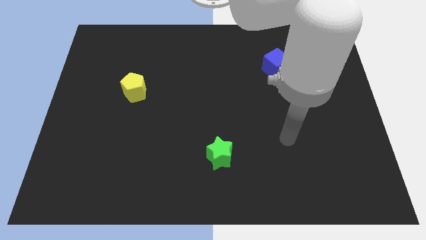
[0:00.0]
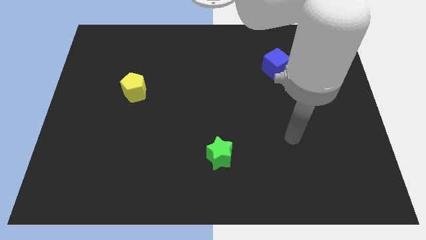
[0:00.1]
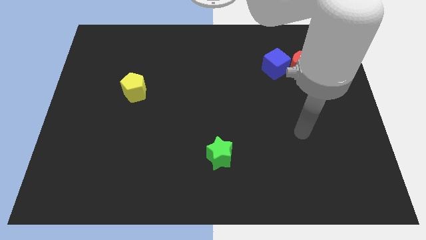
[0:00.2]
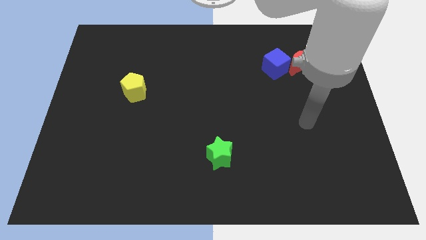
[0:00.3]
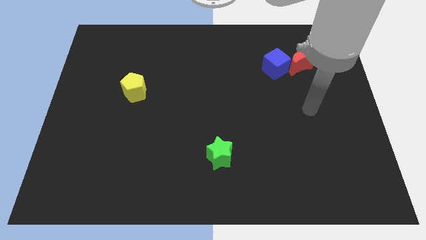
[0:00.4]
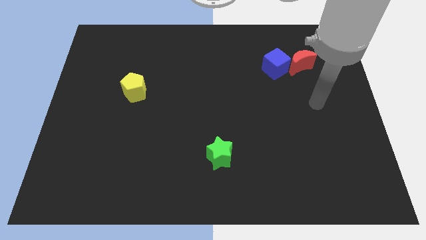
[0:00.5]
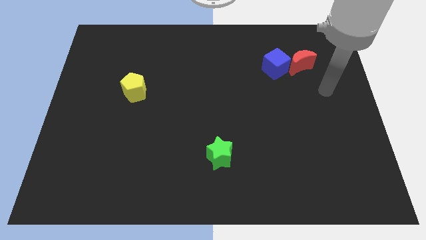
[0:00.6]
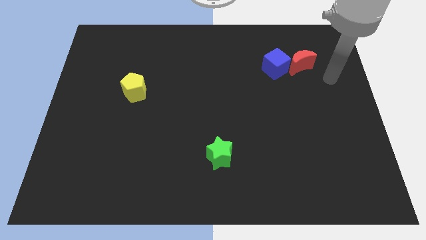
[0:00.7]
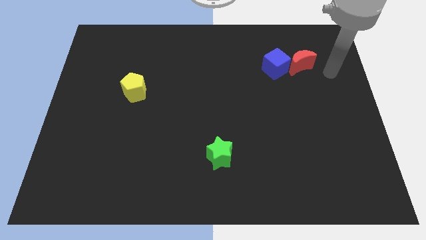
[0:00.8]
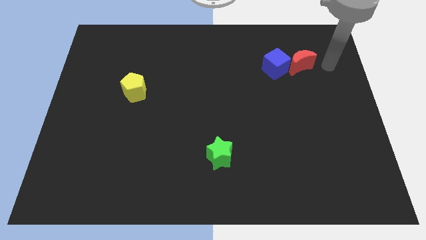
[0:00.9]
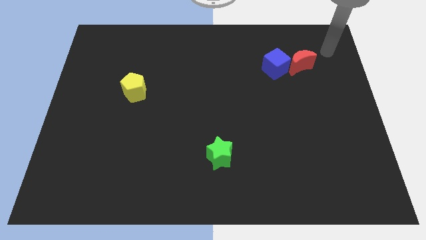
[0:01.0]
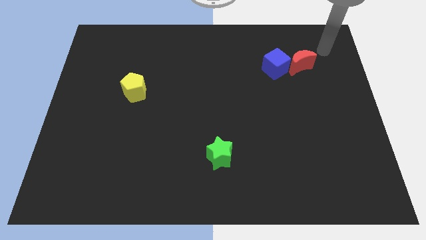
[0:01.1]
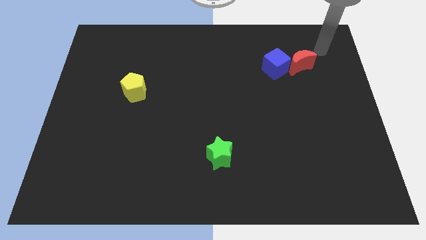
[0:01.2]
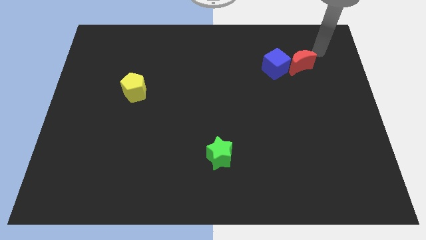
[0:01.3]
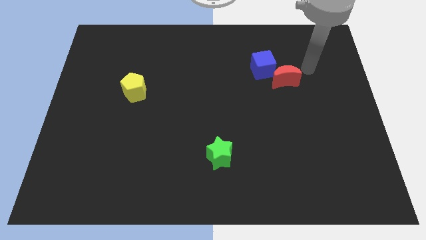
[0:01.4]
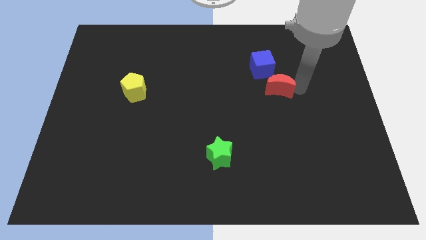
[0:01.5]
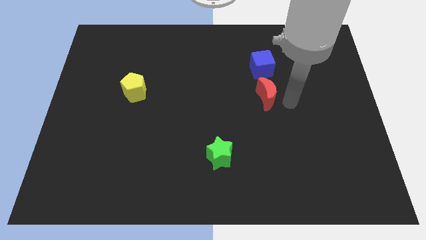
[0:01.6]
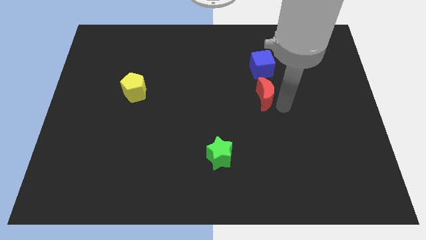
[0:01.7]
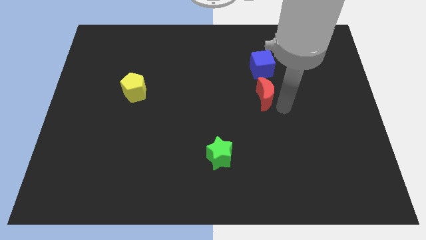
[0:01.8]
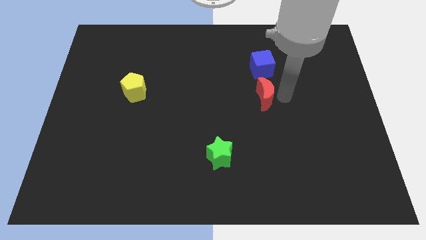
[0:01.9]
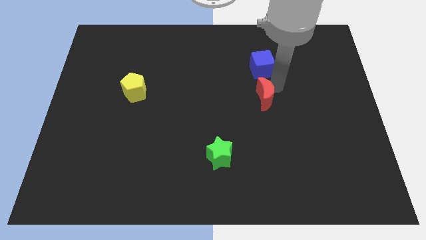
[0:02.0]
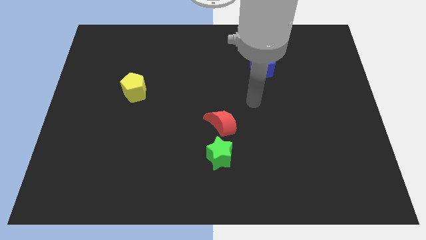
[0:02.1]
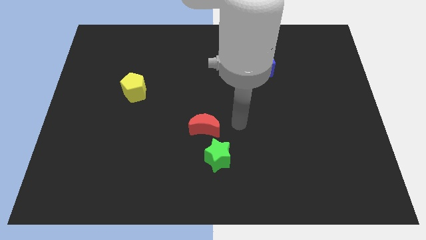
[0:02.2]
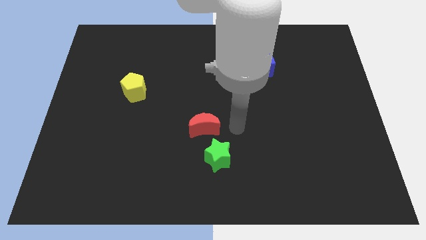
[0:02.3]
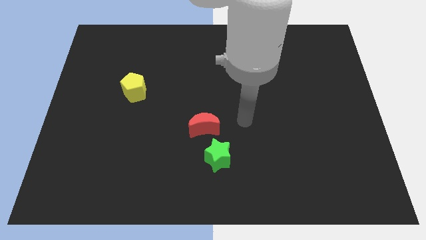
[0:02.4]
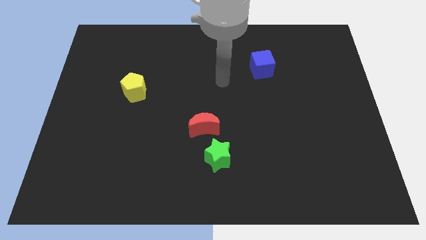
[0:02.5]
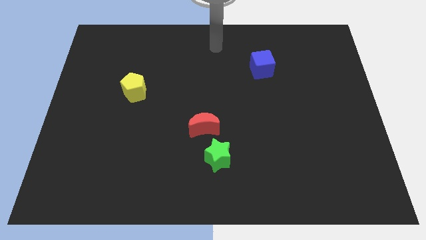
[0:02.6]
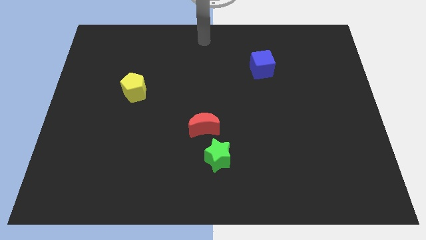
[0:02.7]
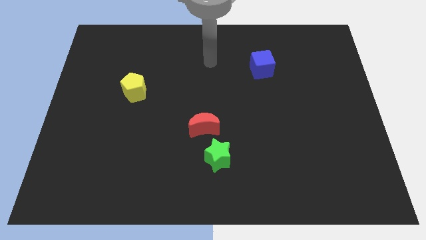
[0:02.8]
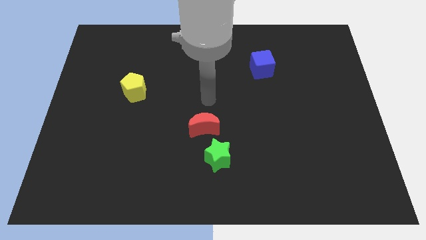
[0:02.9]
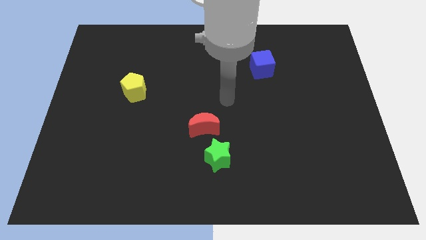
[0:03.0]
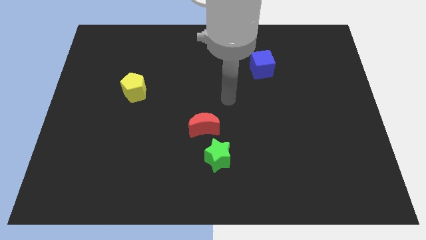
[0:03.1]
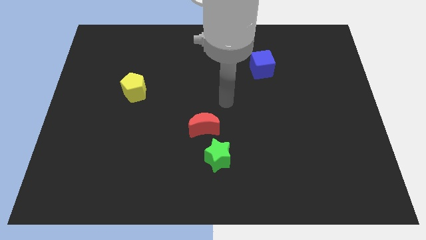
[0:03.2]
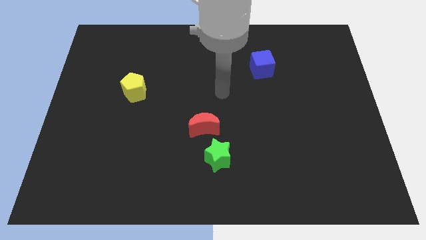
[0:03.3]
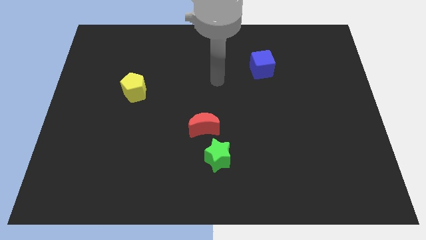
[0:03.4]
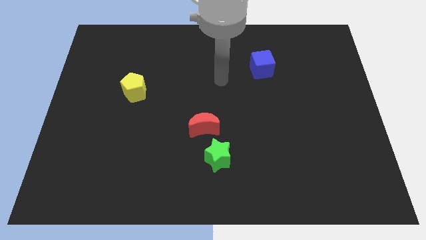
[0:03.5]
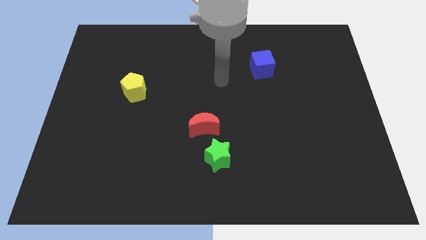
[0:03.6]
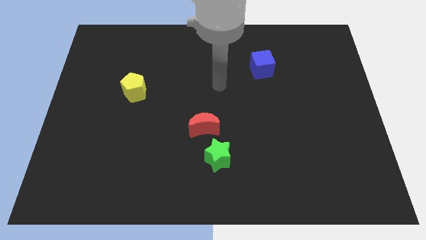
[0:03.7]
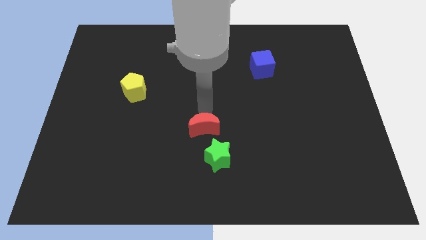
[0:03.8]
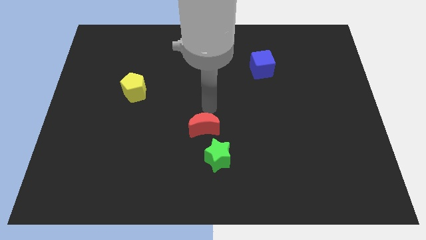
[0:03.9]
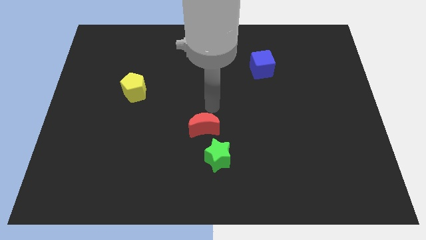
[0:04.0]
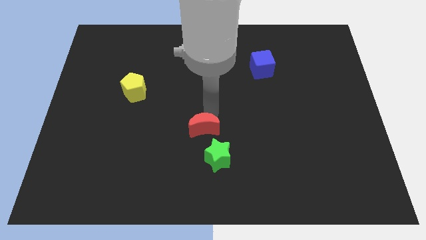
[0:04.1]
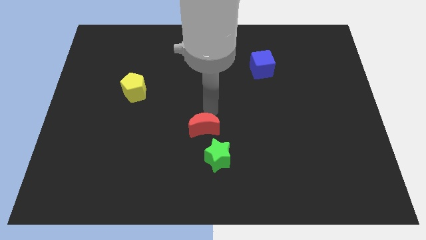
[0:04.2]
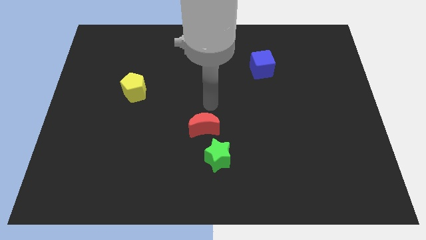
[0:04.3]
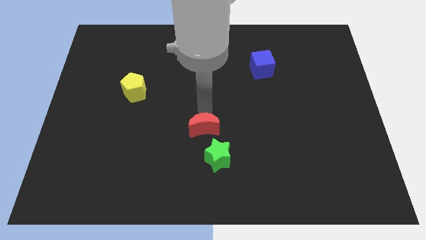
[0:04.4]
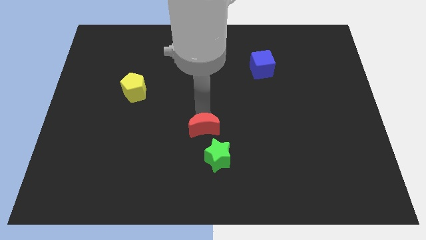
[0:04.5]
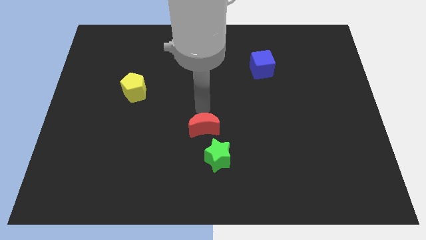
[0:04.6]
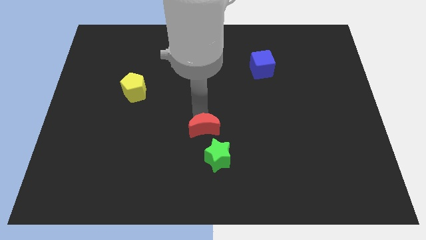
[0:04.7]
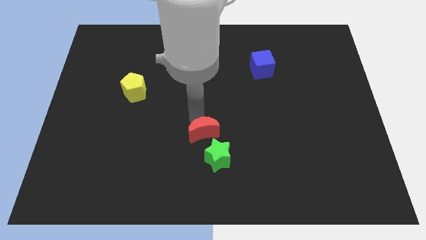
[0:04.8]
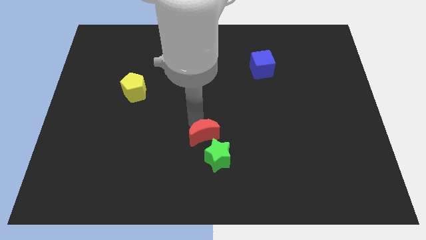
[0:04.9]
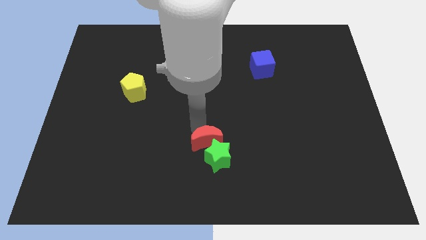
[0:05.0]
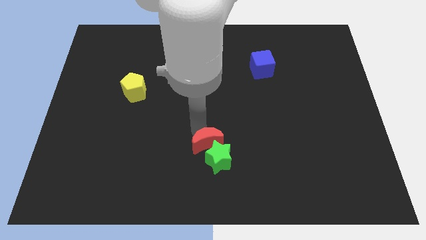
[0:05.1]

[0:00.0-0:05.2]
put the moon to the star

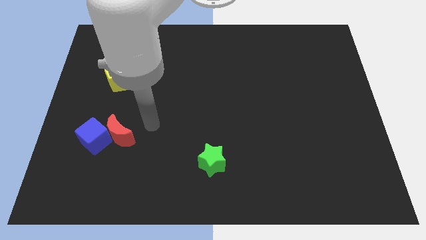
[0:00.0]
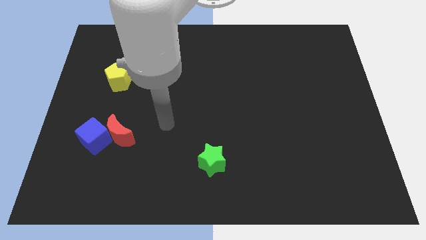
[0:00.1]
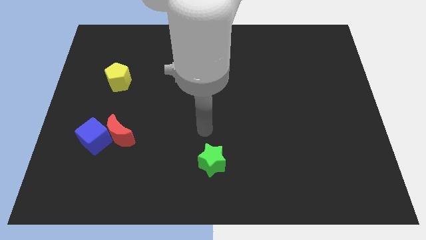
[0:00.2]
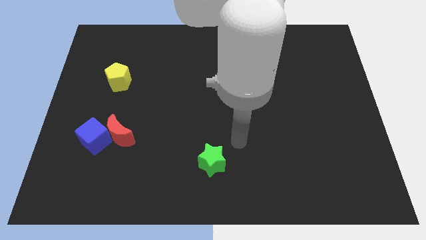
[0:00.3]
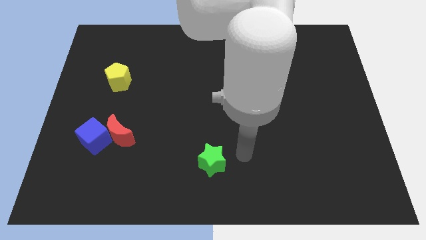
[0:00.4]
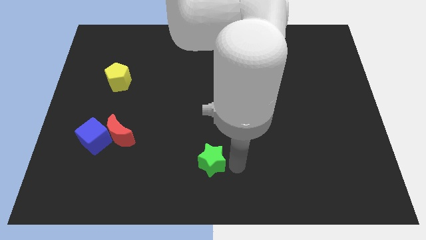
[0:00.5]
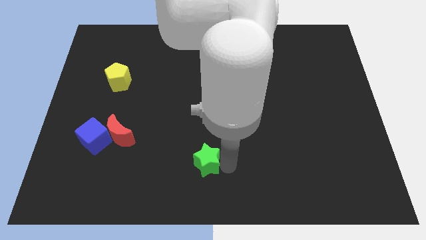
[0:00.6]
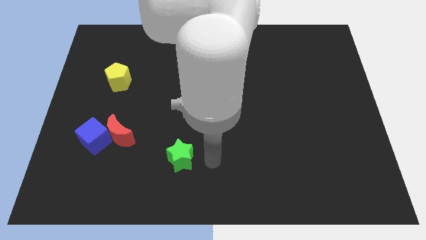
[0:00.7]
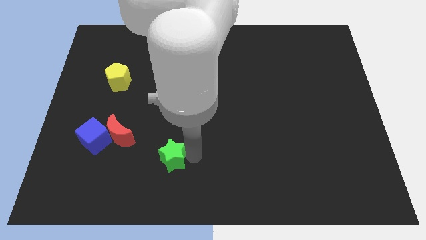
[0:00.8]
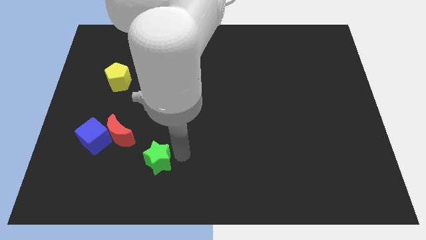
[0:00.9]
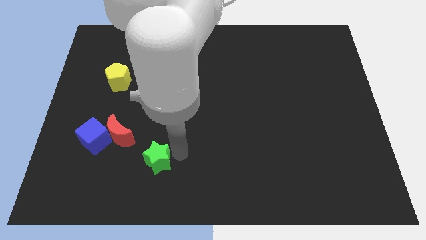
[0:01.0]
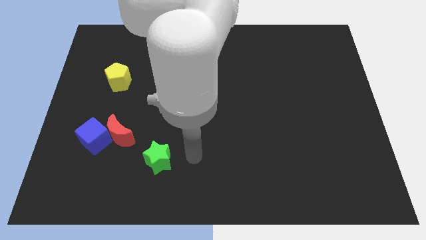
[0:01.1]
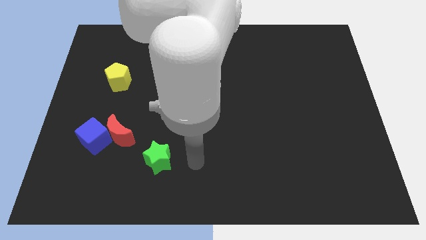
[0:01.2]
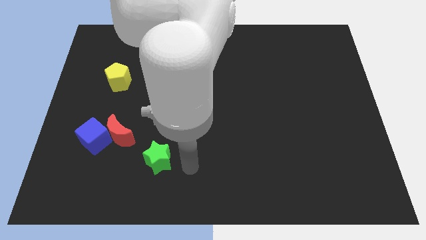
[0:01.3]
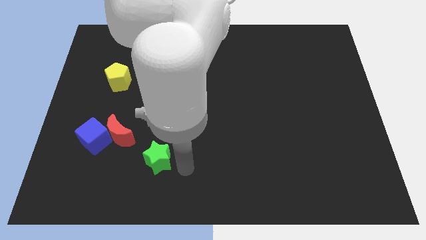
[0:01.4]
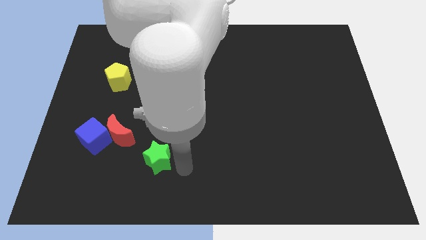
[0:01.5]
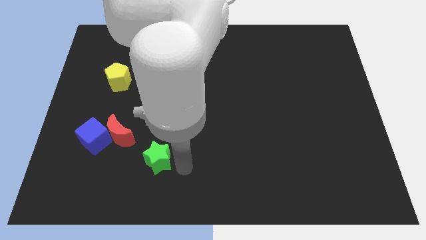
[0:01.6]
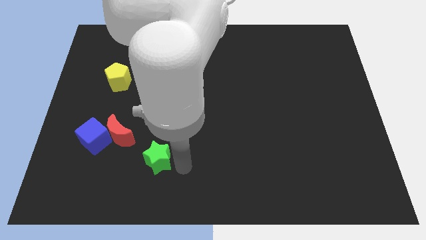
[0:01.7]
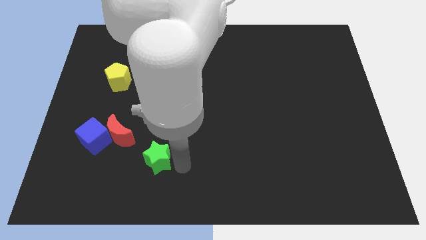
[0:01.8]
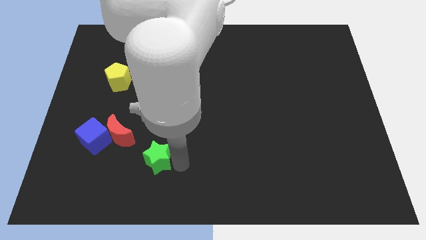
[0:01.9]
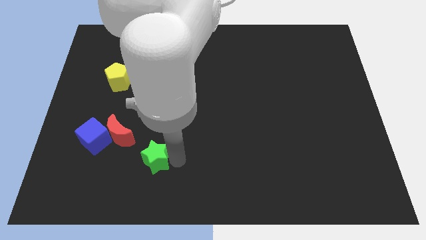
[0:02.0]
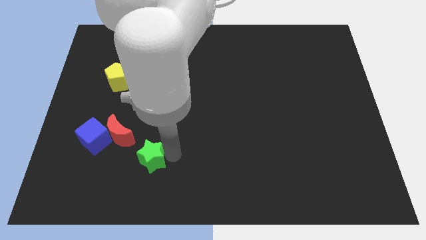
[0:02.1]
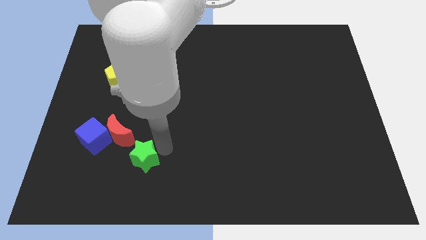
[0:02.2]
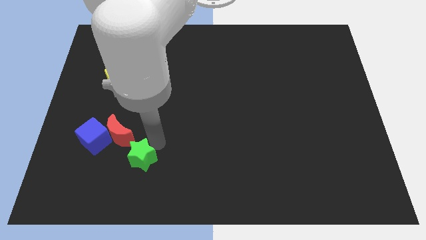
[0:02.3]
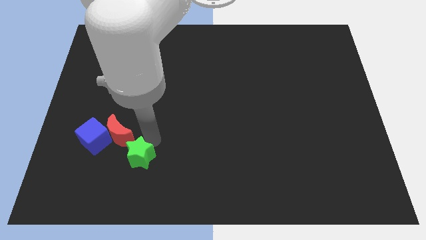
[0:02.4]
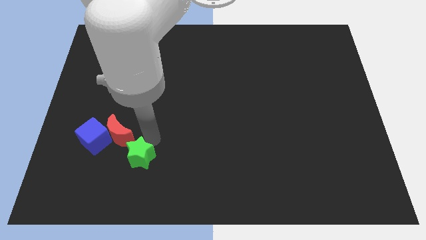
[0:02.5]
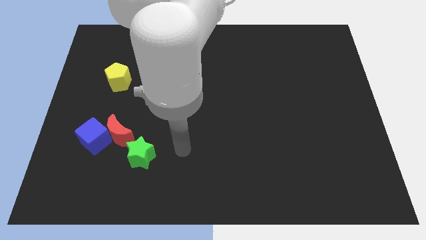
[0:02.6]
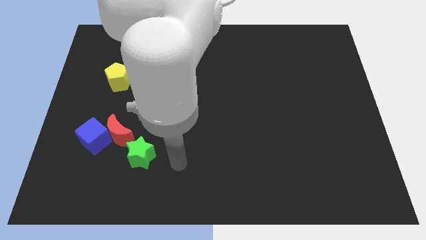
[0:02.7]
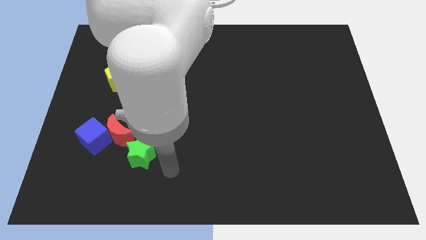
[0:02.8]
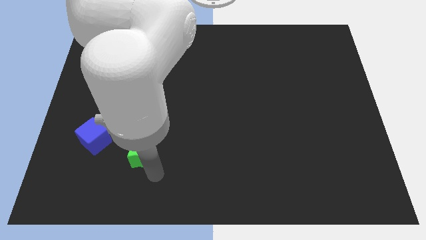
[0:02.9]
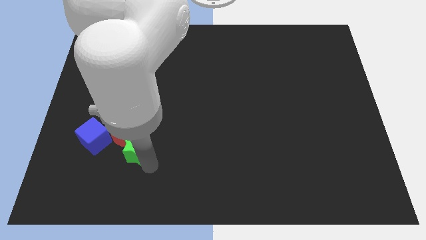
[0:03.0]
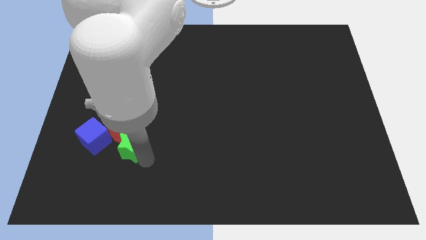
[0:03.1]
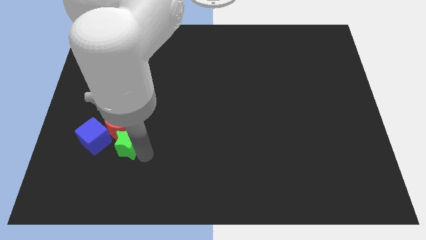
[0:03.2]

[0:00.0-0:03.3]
push the star towards the red moon
